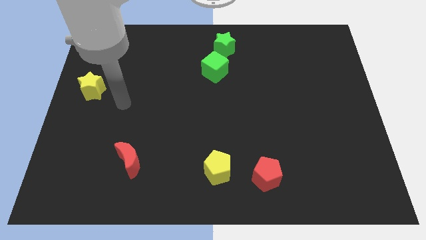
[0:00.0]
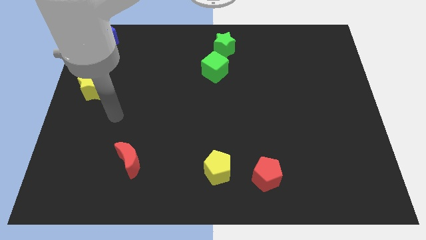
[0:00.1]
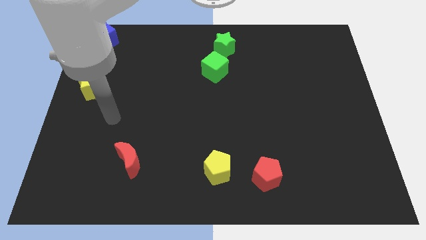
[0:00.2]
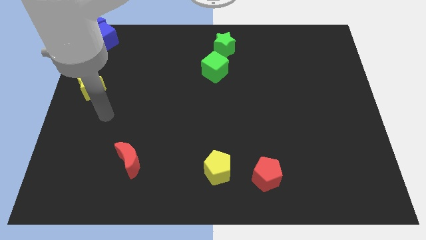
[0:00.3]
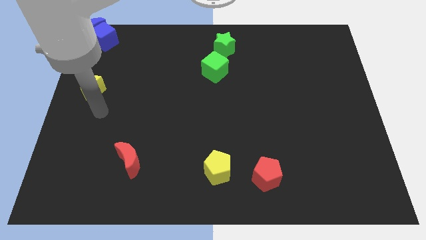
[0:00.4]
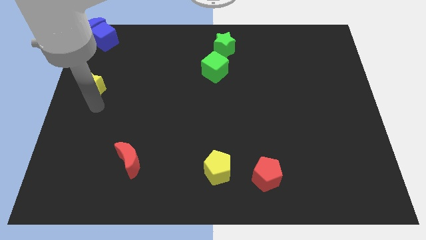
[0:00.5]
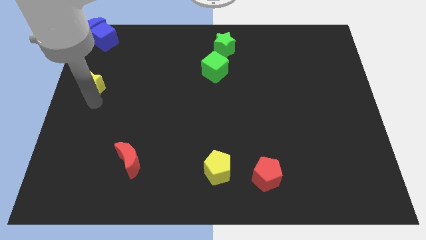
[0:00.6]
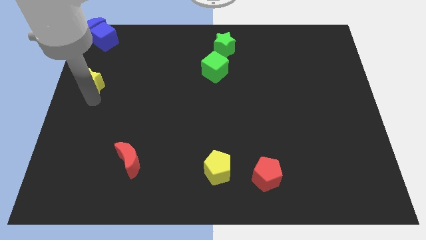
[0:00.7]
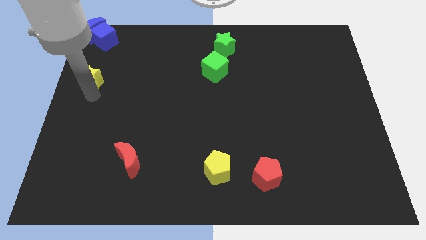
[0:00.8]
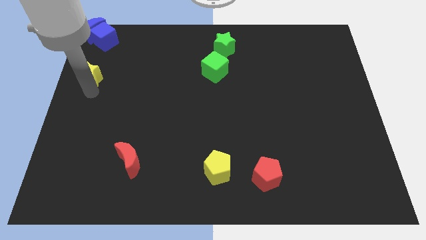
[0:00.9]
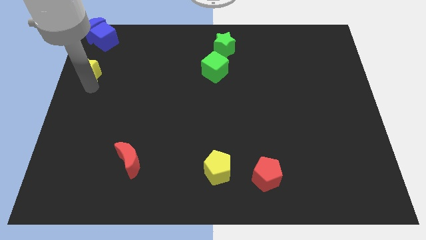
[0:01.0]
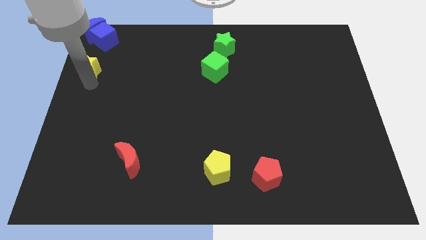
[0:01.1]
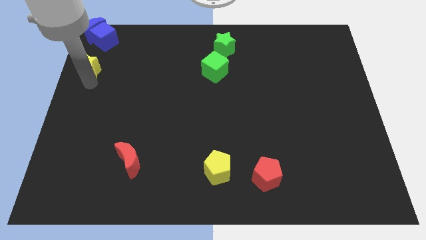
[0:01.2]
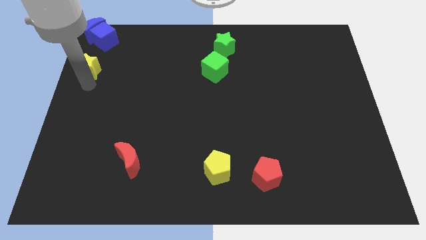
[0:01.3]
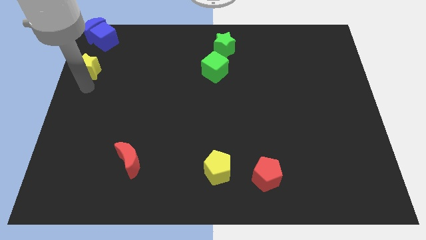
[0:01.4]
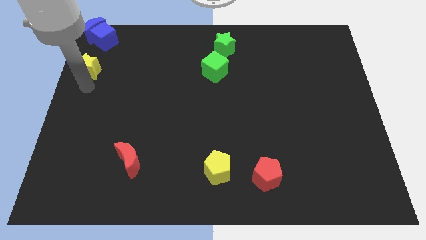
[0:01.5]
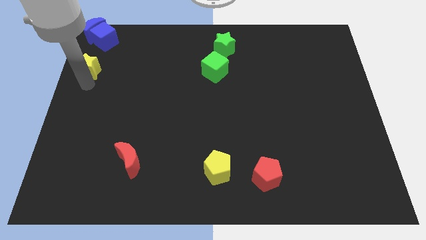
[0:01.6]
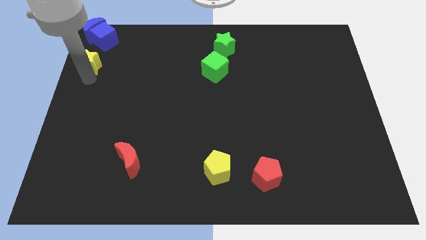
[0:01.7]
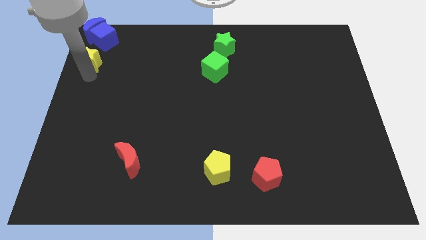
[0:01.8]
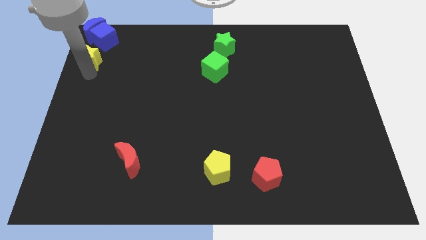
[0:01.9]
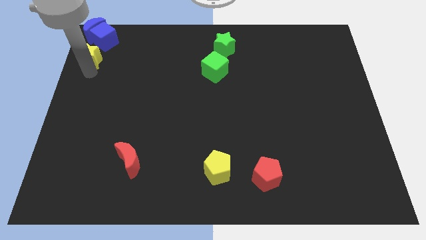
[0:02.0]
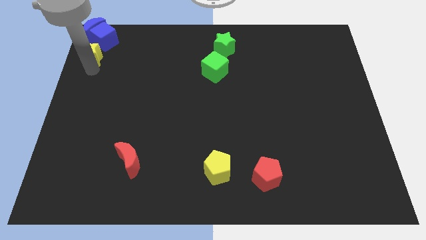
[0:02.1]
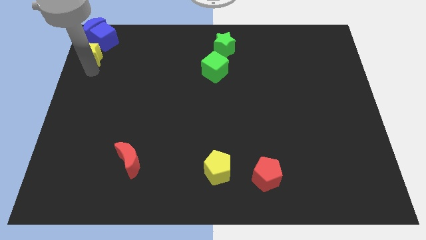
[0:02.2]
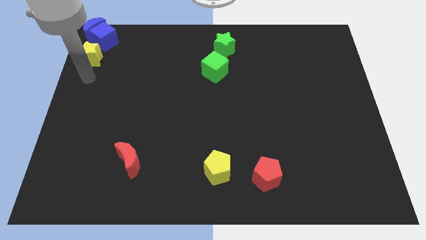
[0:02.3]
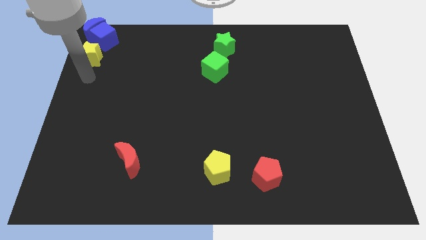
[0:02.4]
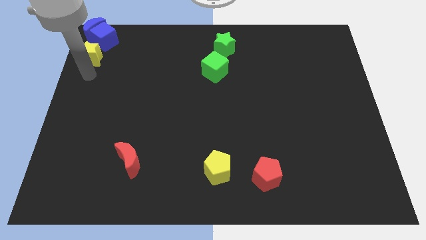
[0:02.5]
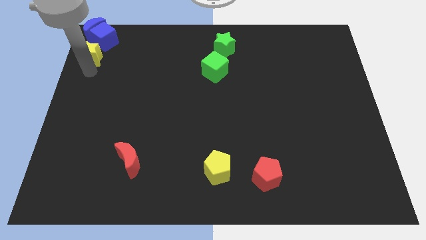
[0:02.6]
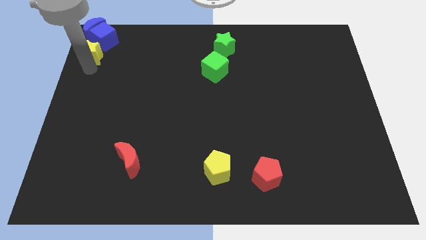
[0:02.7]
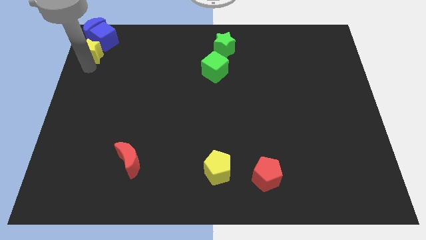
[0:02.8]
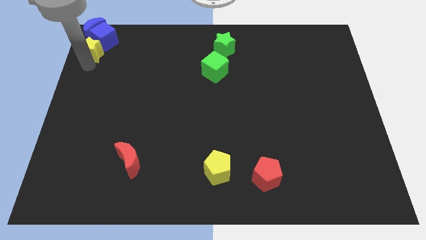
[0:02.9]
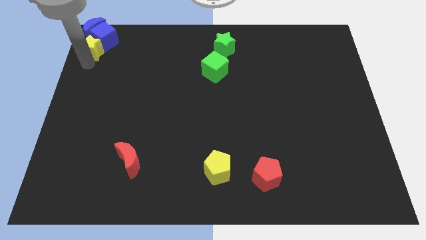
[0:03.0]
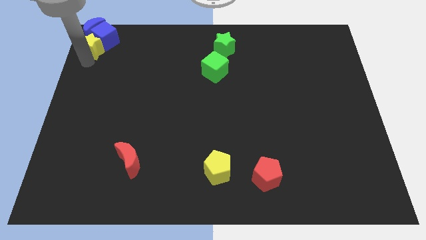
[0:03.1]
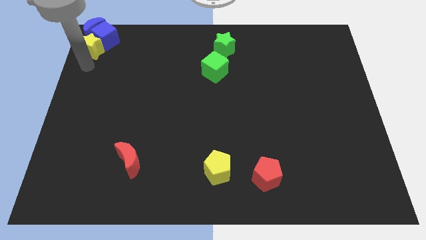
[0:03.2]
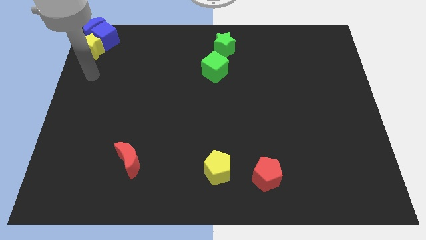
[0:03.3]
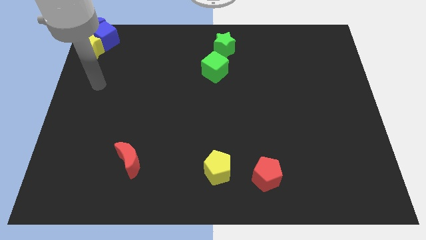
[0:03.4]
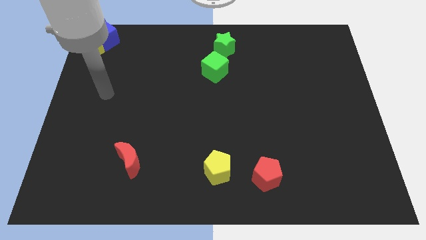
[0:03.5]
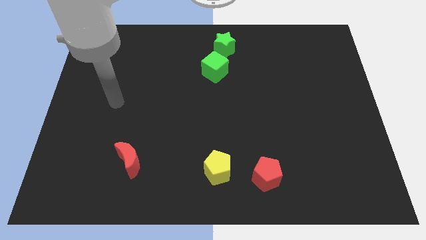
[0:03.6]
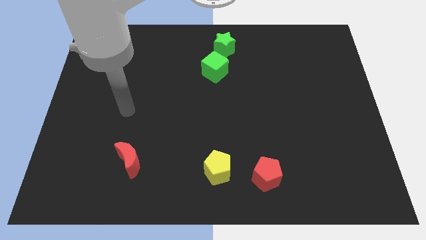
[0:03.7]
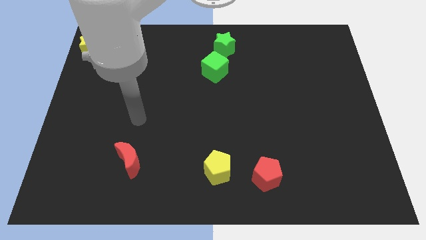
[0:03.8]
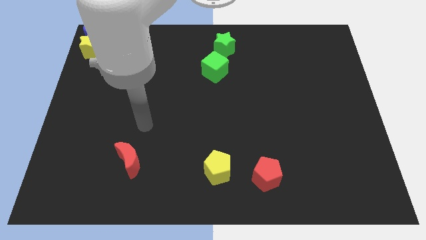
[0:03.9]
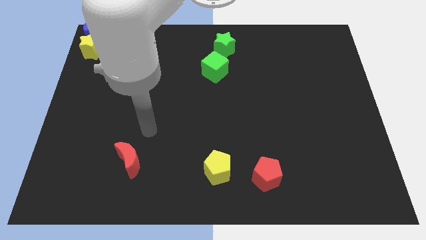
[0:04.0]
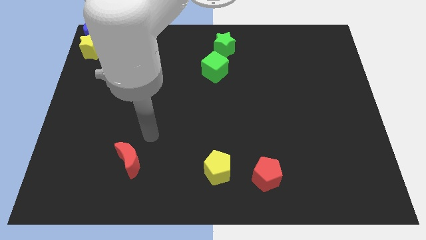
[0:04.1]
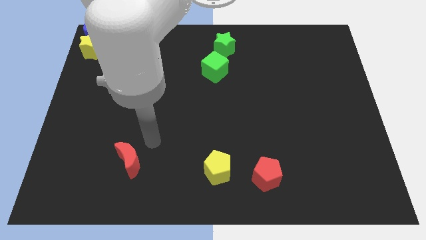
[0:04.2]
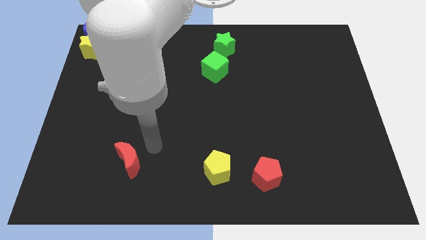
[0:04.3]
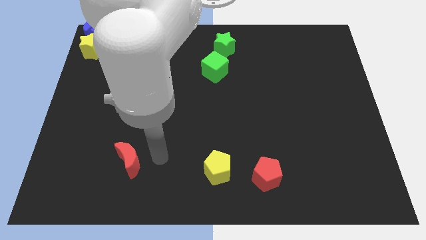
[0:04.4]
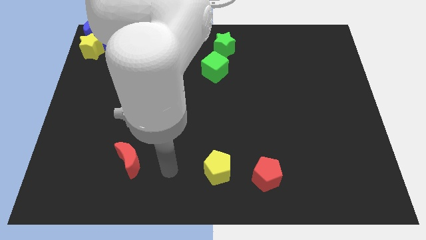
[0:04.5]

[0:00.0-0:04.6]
move yellow star left beside the blue cube

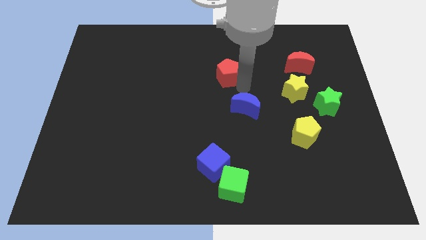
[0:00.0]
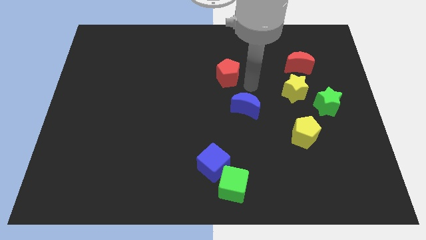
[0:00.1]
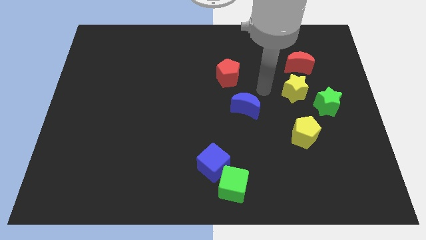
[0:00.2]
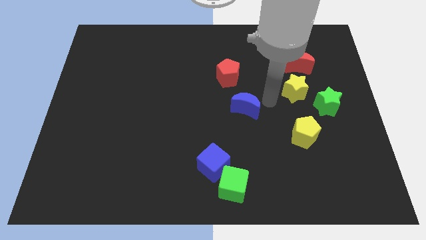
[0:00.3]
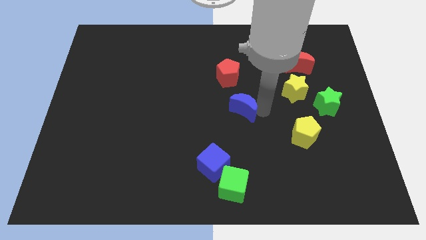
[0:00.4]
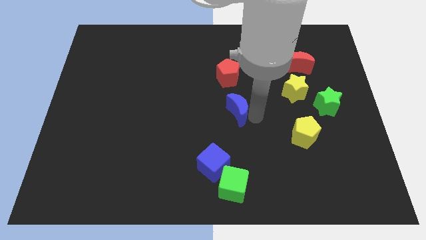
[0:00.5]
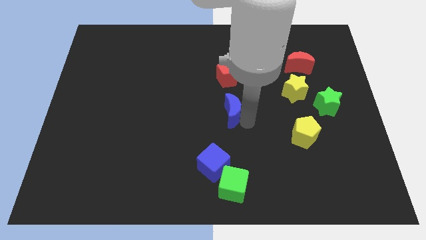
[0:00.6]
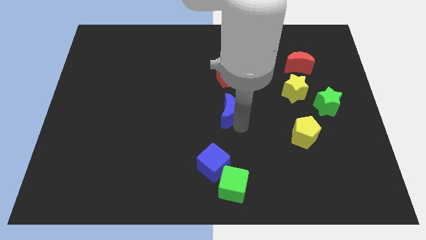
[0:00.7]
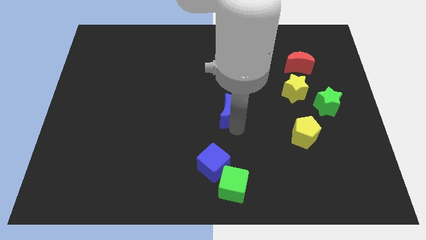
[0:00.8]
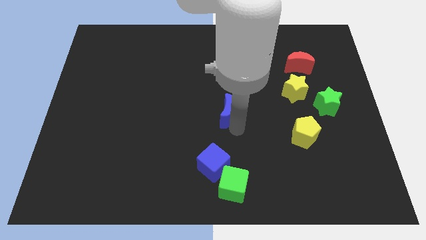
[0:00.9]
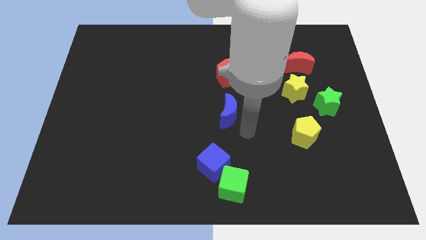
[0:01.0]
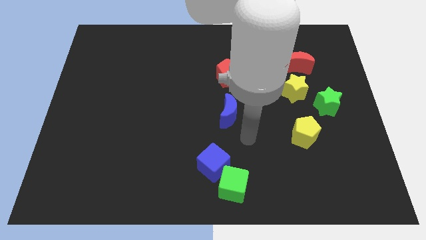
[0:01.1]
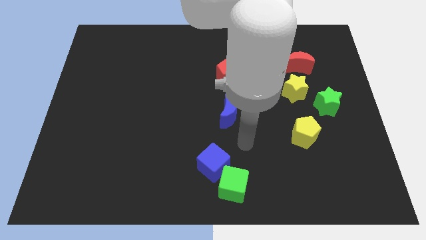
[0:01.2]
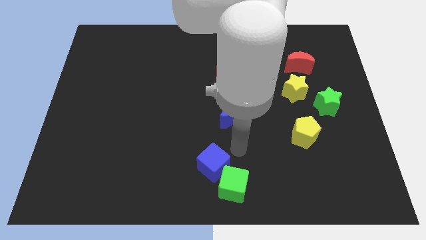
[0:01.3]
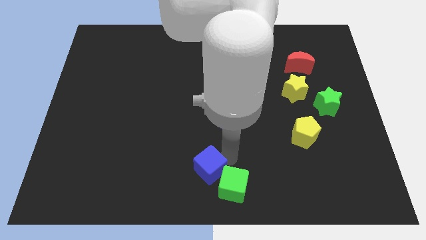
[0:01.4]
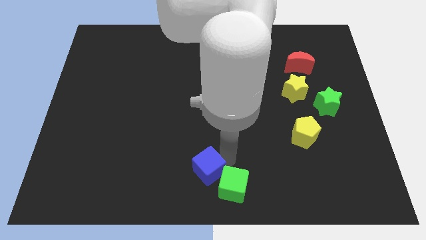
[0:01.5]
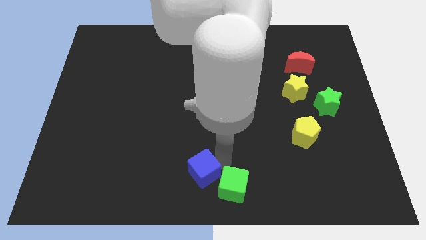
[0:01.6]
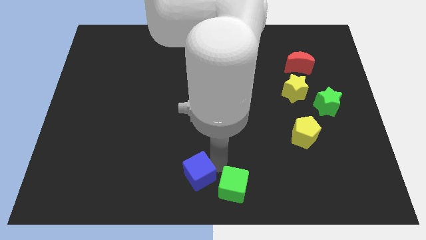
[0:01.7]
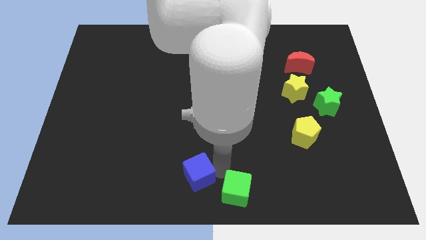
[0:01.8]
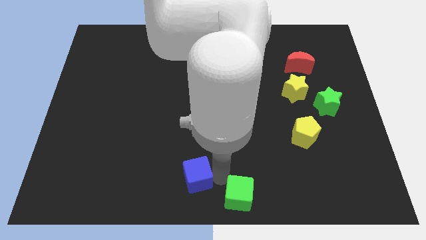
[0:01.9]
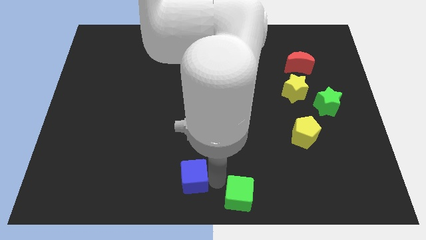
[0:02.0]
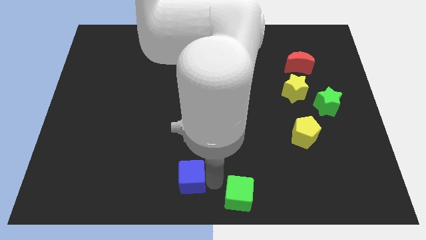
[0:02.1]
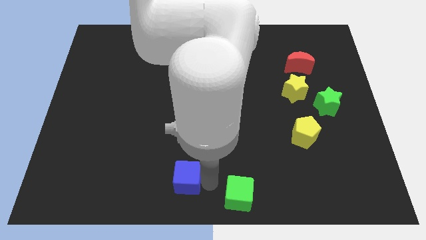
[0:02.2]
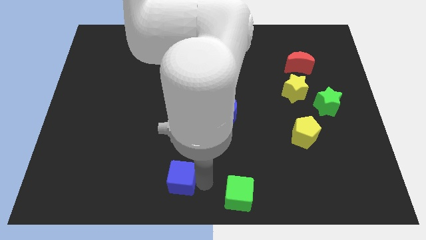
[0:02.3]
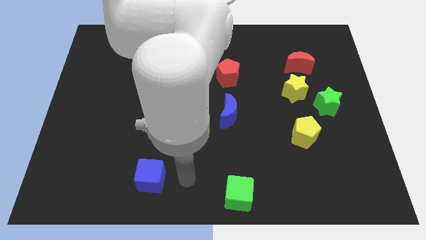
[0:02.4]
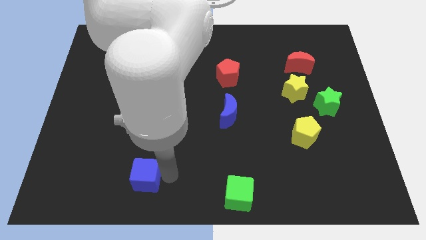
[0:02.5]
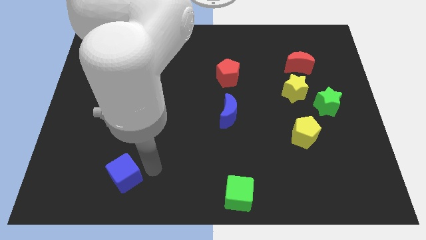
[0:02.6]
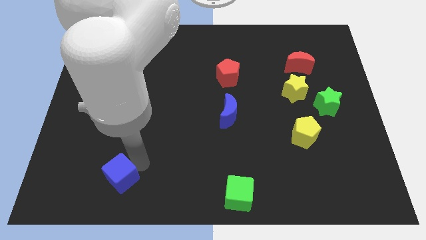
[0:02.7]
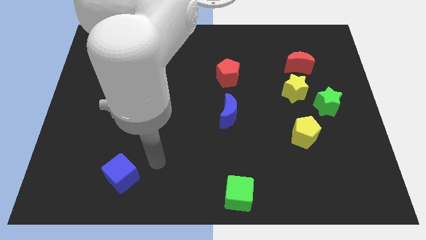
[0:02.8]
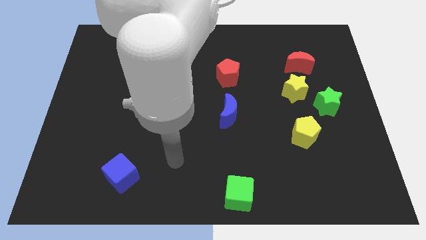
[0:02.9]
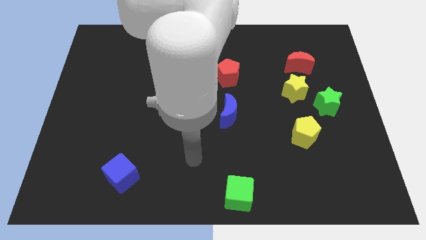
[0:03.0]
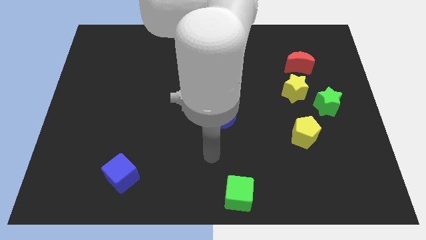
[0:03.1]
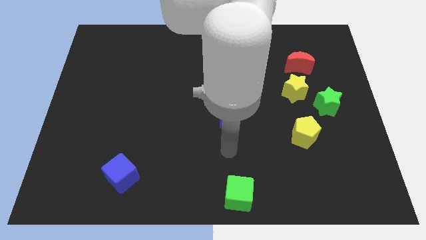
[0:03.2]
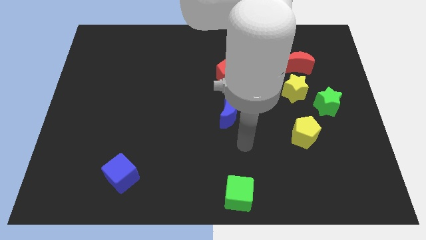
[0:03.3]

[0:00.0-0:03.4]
push the blue cube slightly downwards

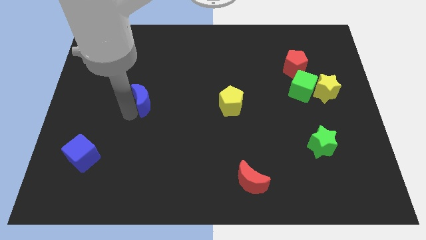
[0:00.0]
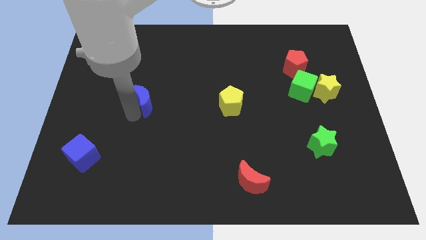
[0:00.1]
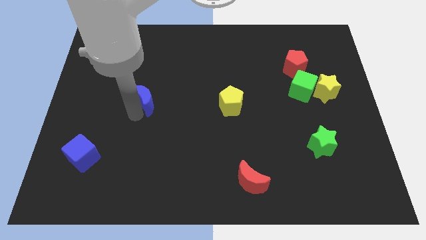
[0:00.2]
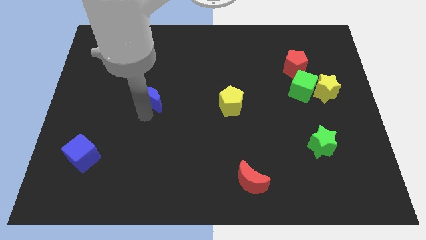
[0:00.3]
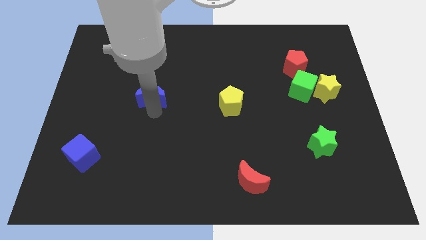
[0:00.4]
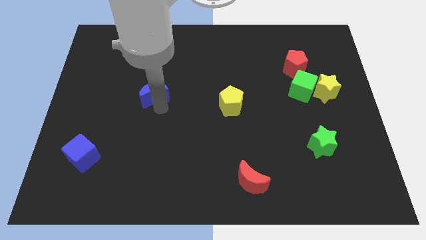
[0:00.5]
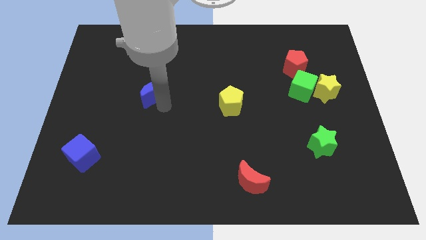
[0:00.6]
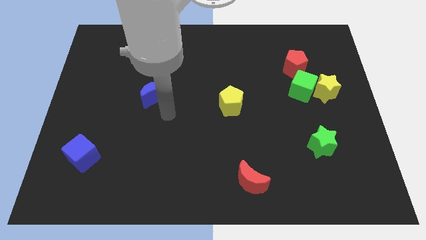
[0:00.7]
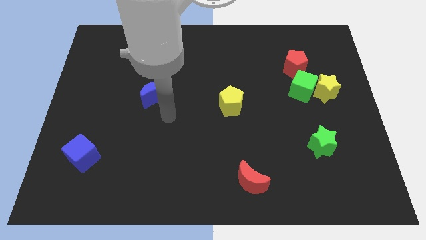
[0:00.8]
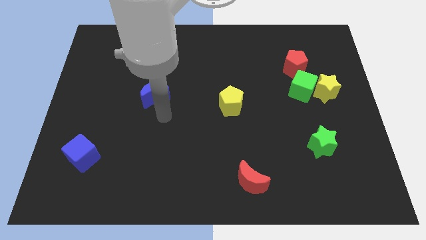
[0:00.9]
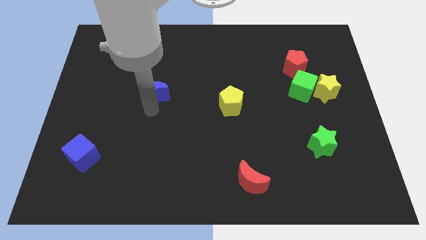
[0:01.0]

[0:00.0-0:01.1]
slide blue moon slightly up
